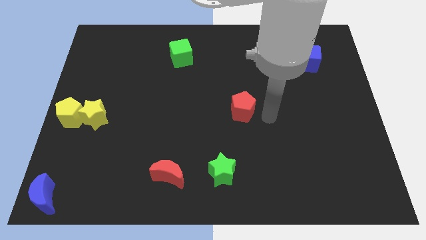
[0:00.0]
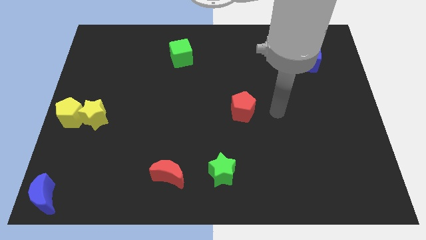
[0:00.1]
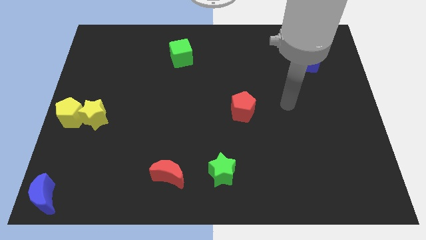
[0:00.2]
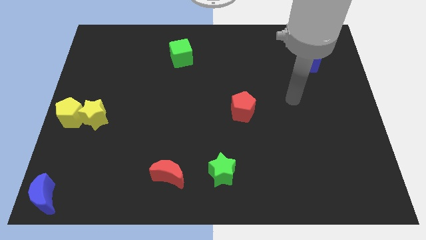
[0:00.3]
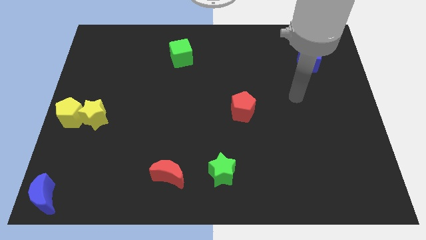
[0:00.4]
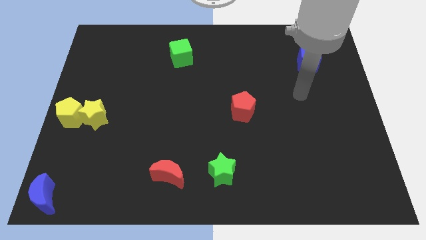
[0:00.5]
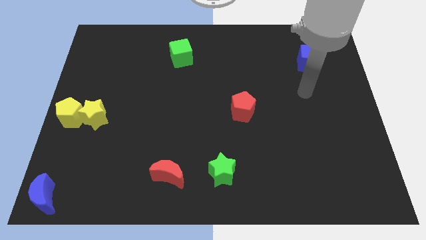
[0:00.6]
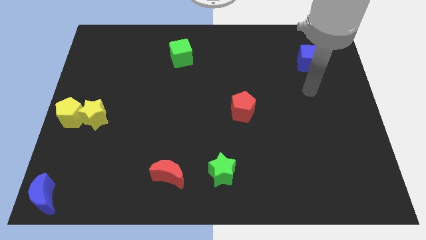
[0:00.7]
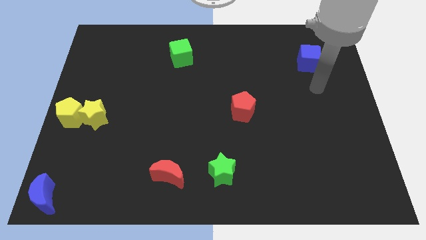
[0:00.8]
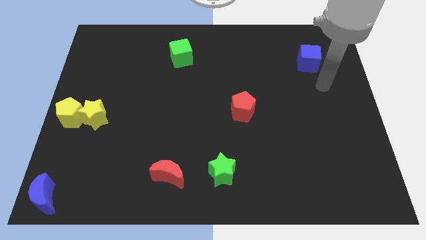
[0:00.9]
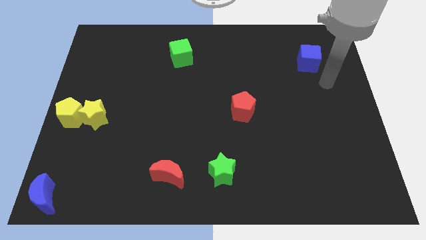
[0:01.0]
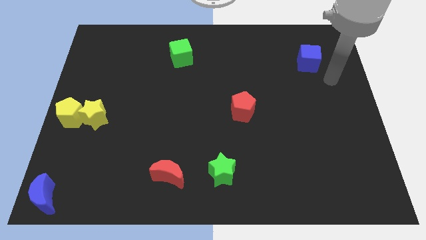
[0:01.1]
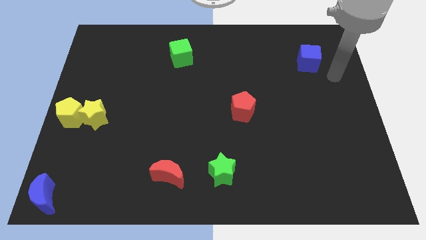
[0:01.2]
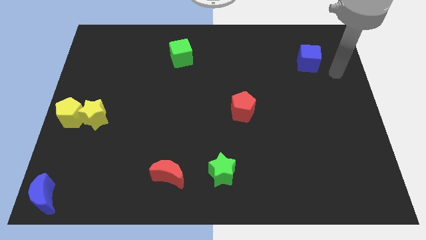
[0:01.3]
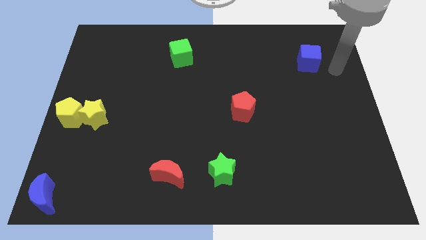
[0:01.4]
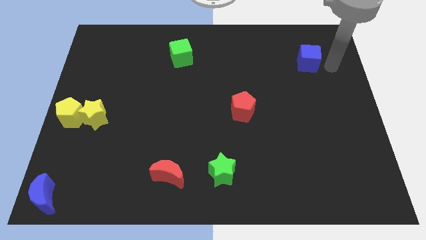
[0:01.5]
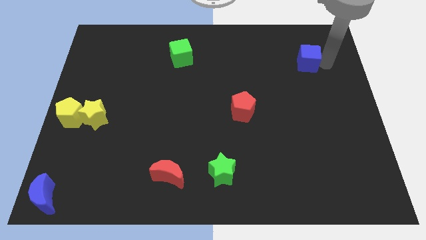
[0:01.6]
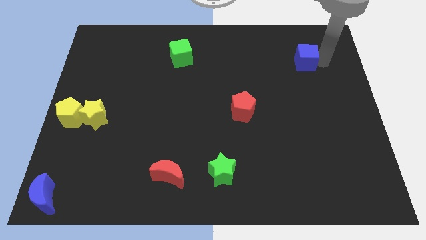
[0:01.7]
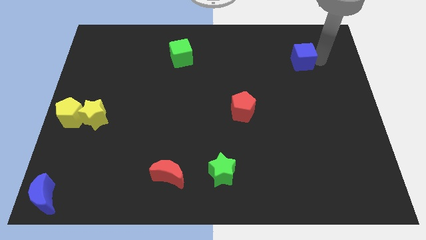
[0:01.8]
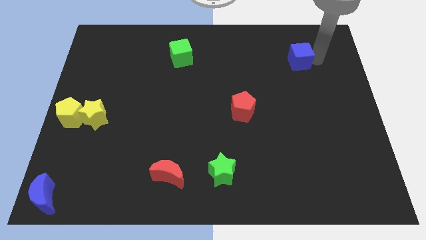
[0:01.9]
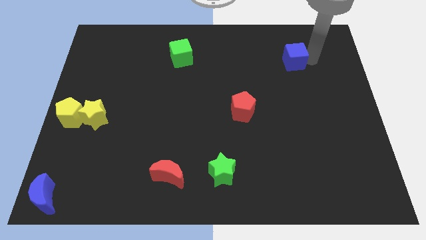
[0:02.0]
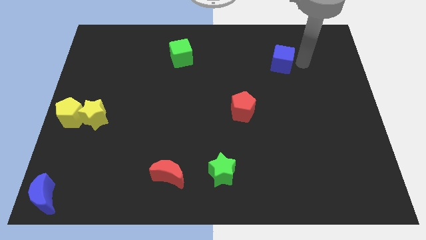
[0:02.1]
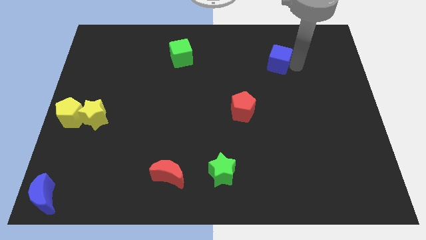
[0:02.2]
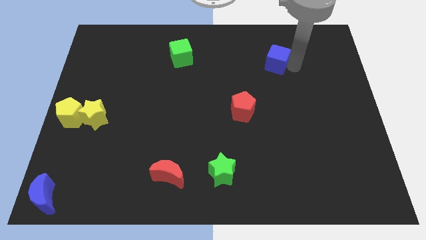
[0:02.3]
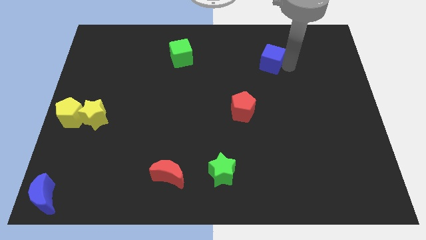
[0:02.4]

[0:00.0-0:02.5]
push the blue cube towards the left side

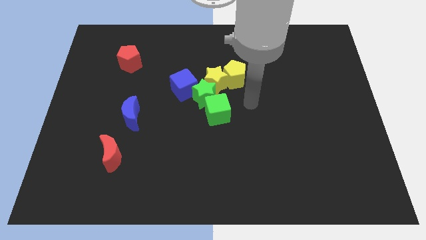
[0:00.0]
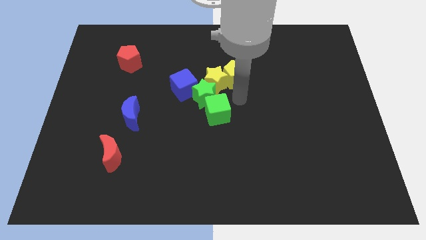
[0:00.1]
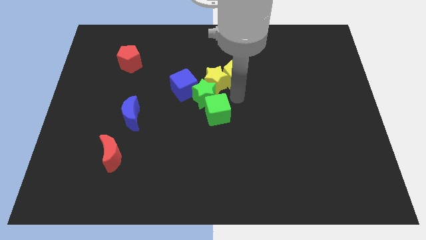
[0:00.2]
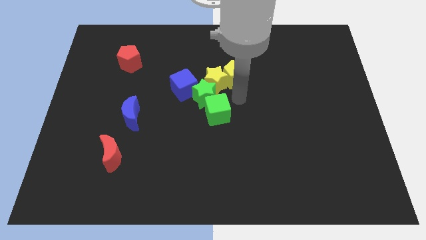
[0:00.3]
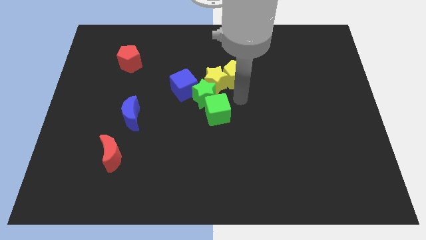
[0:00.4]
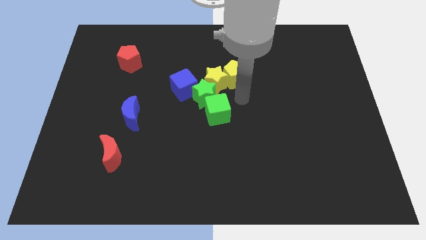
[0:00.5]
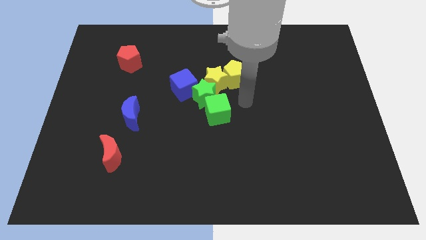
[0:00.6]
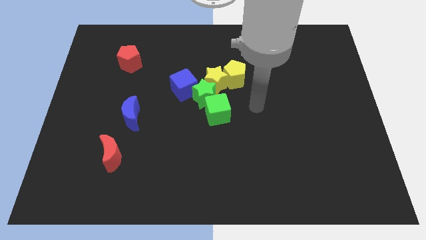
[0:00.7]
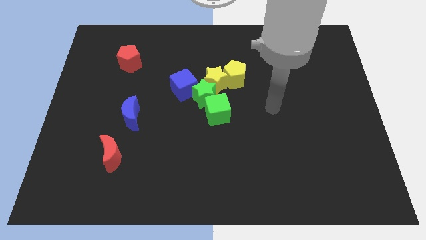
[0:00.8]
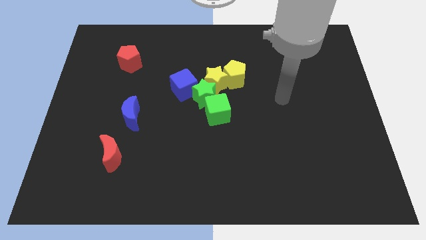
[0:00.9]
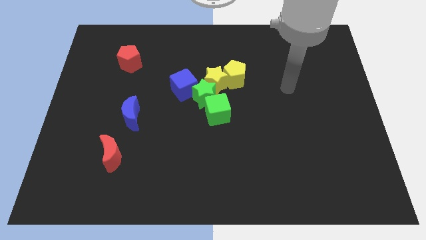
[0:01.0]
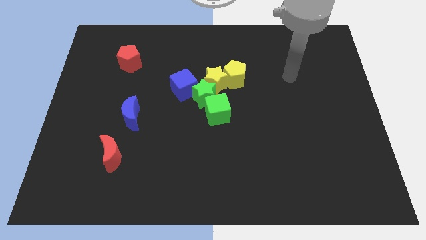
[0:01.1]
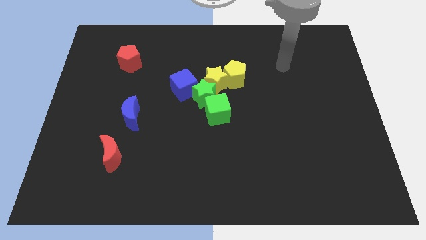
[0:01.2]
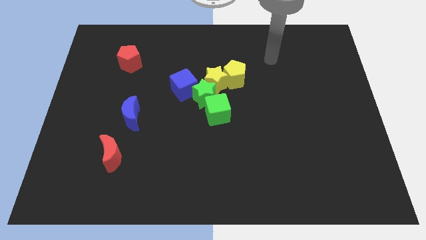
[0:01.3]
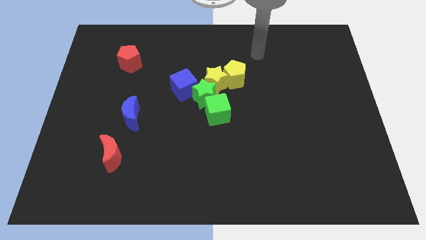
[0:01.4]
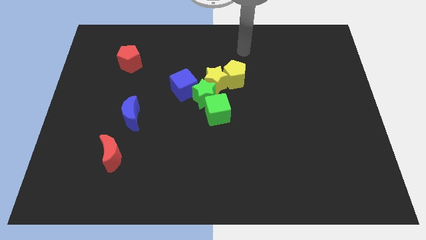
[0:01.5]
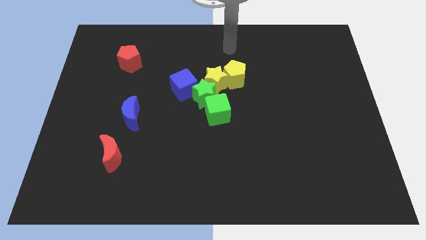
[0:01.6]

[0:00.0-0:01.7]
point your arm above the yellow pentagon

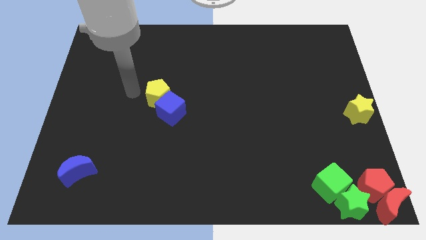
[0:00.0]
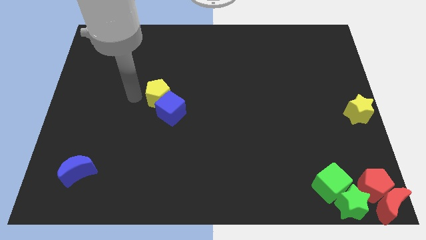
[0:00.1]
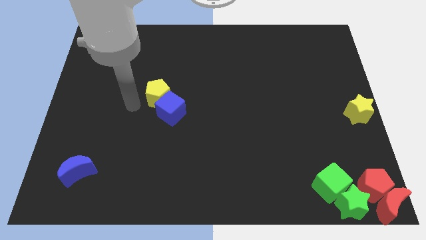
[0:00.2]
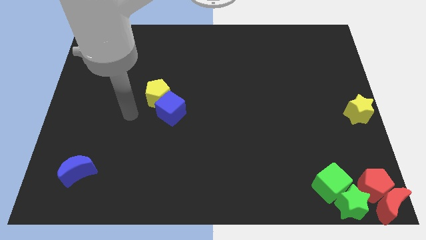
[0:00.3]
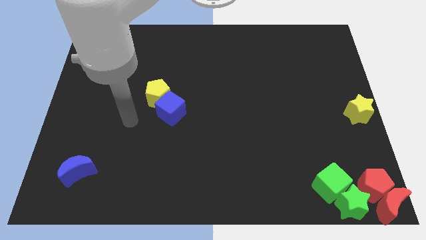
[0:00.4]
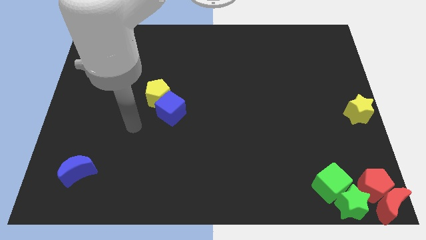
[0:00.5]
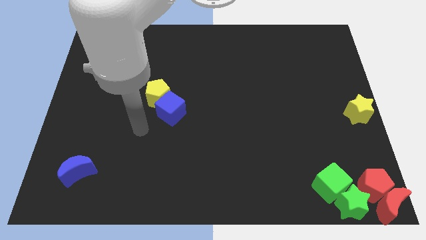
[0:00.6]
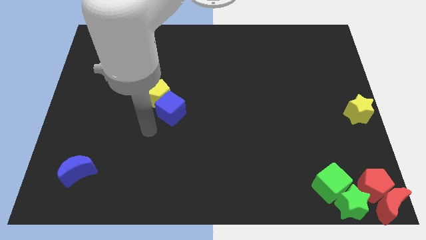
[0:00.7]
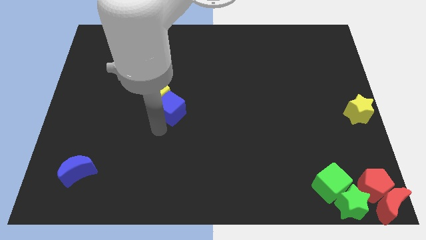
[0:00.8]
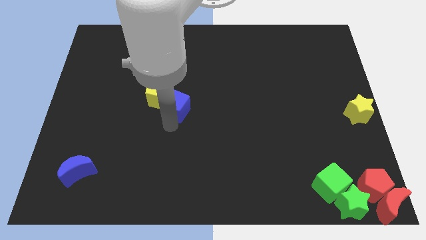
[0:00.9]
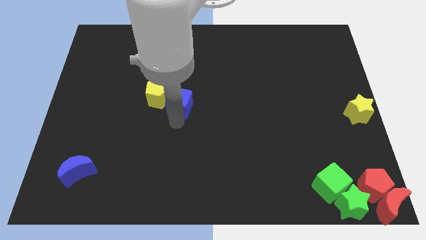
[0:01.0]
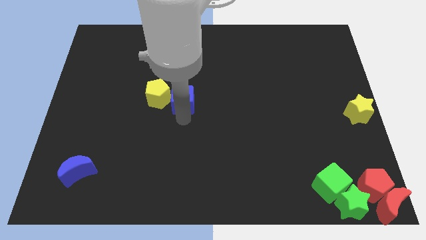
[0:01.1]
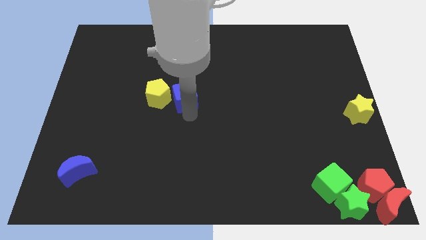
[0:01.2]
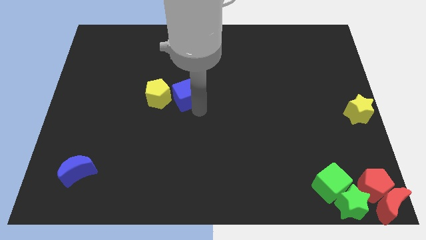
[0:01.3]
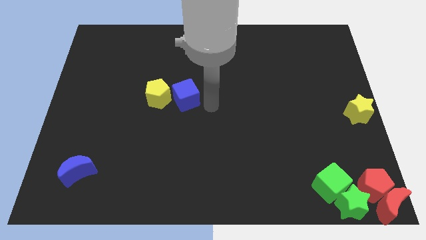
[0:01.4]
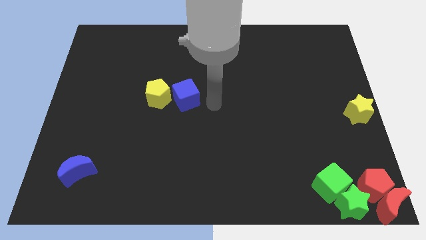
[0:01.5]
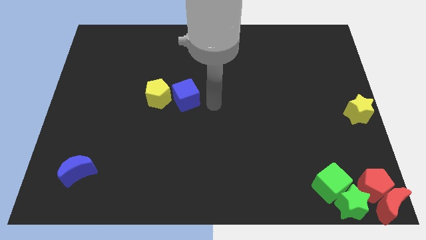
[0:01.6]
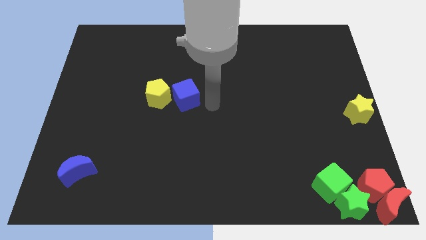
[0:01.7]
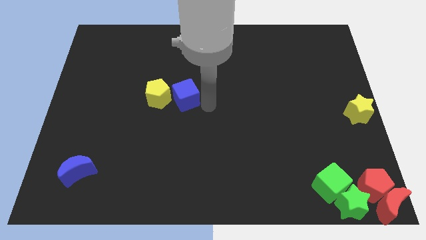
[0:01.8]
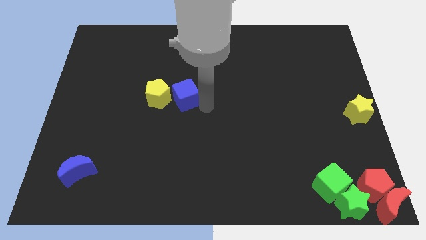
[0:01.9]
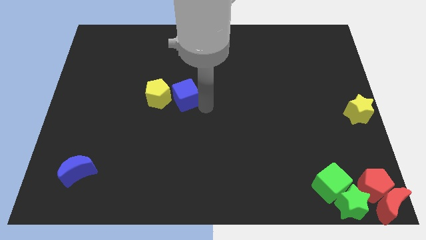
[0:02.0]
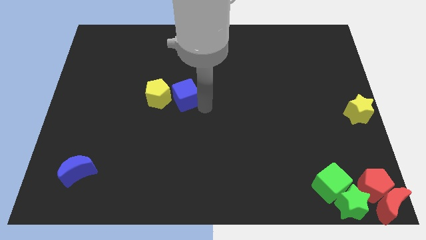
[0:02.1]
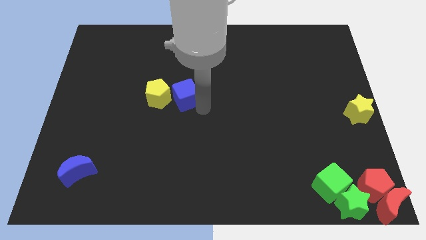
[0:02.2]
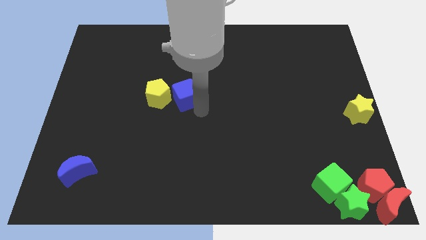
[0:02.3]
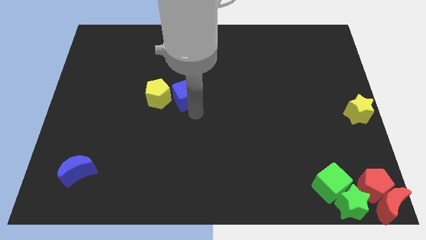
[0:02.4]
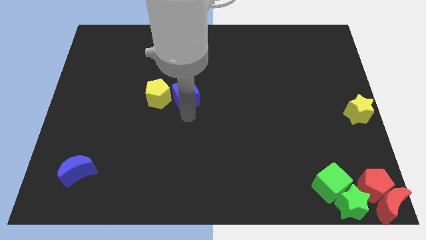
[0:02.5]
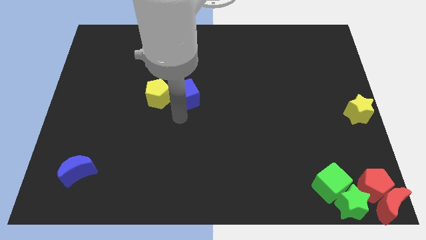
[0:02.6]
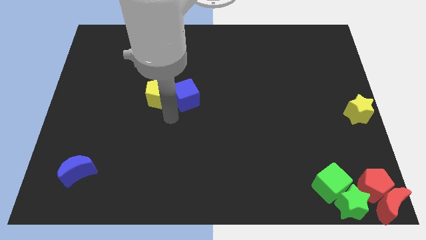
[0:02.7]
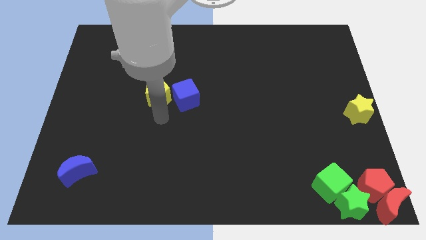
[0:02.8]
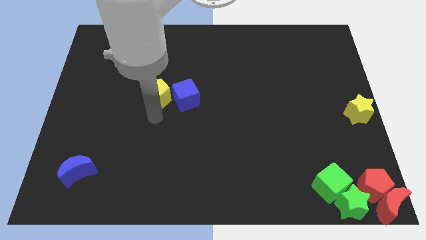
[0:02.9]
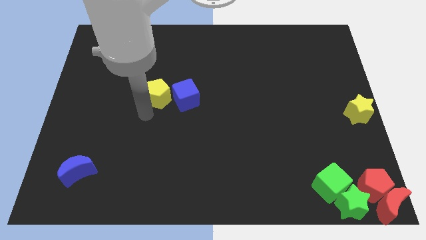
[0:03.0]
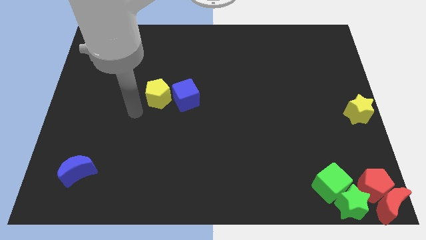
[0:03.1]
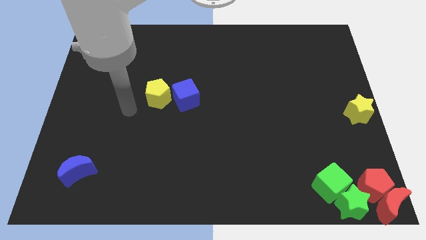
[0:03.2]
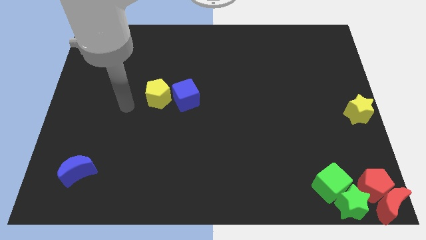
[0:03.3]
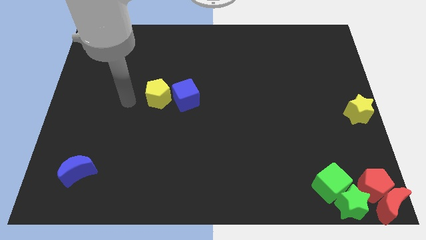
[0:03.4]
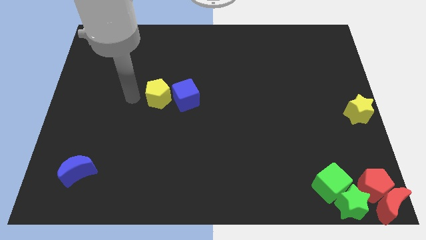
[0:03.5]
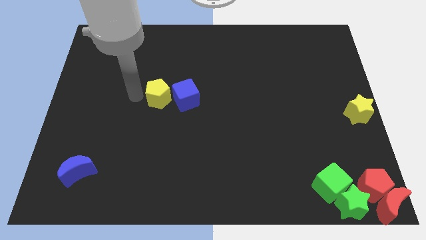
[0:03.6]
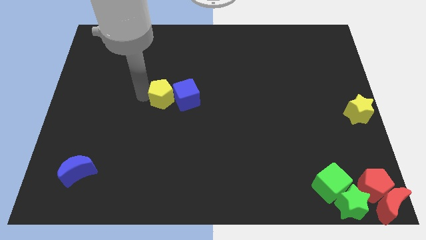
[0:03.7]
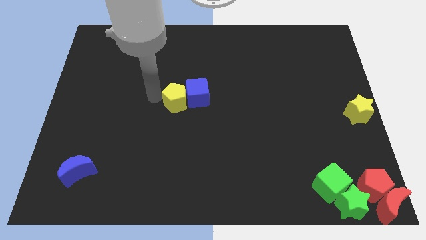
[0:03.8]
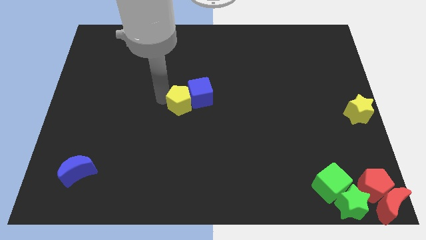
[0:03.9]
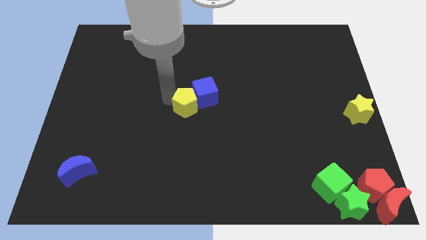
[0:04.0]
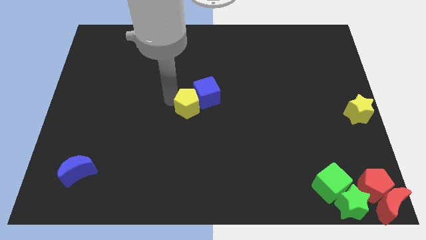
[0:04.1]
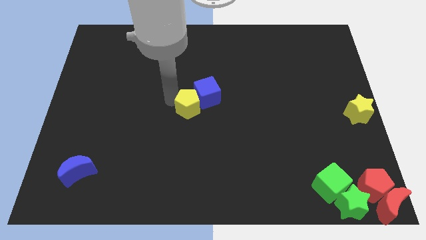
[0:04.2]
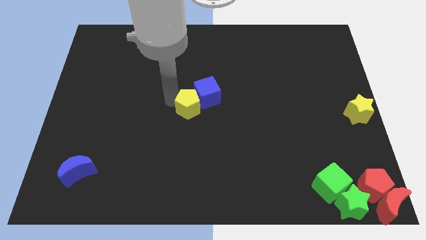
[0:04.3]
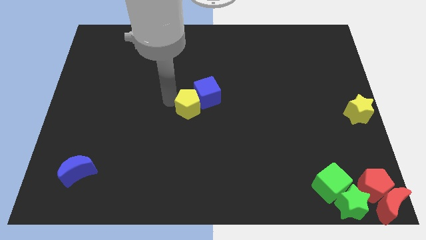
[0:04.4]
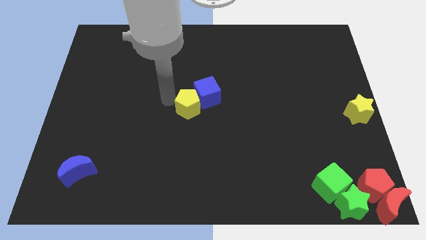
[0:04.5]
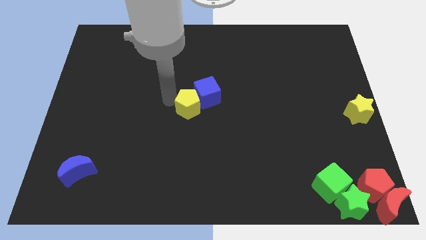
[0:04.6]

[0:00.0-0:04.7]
push the yellow pentagon and the blue cube towards the center of the board
